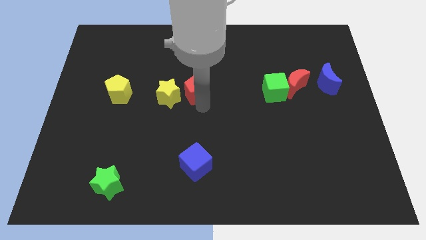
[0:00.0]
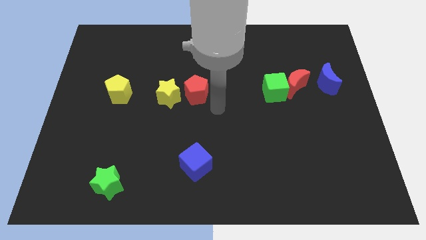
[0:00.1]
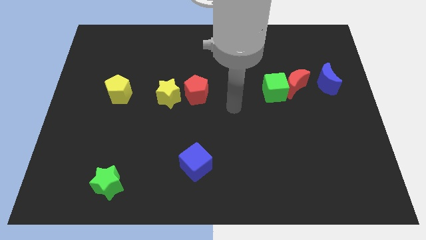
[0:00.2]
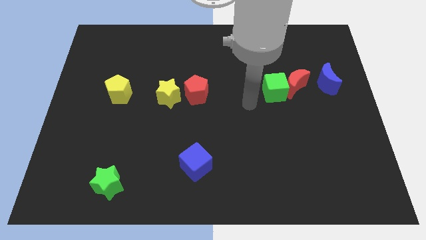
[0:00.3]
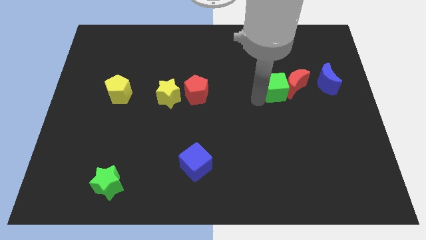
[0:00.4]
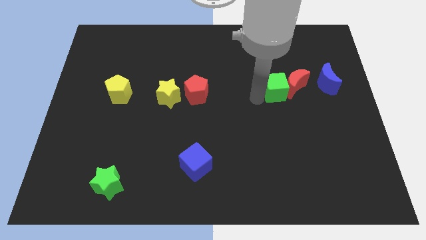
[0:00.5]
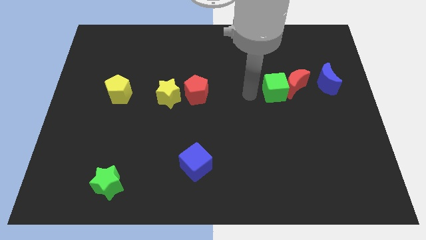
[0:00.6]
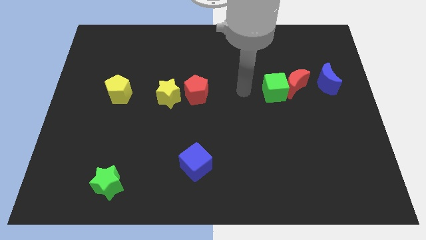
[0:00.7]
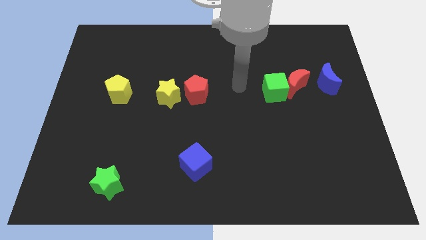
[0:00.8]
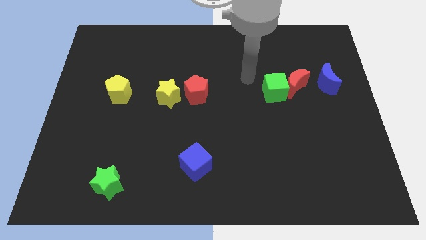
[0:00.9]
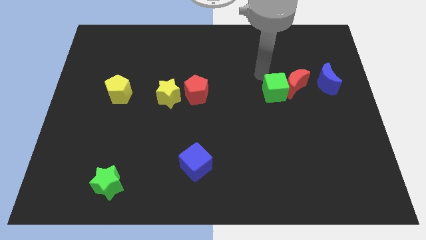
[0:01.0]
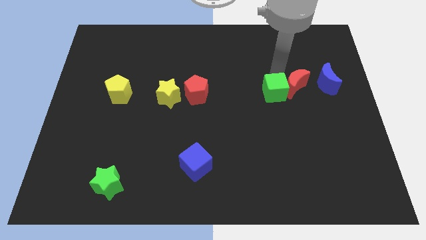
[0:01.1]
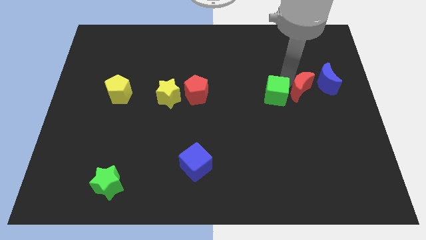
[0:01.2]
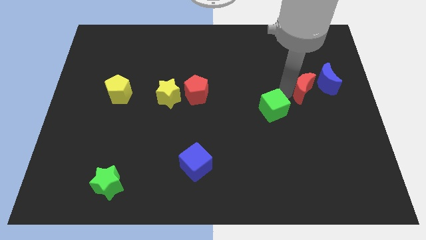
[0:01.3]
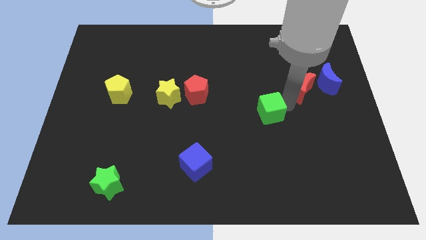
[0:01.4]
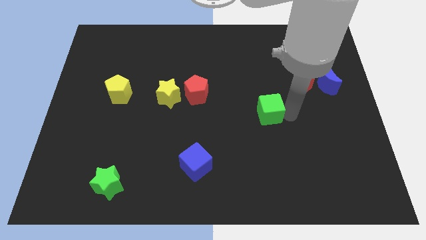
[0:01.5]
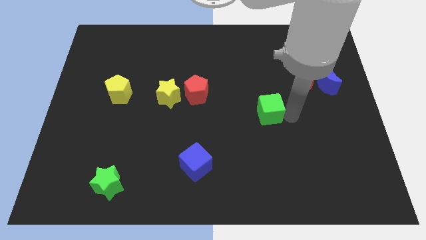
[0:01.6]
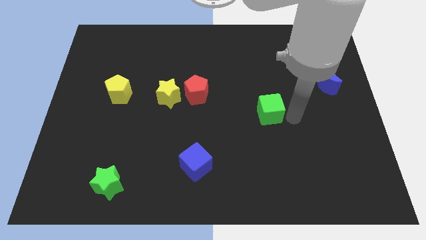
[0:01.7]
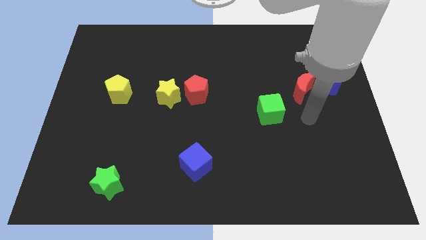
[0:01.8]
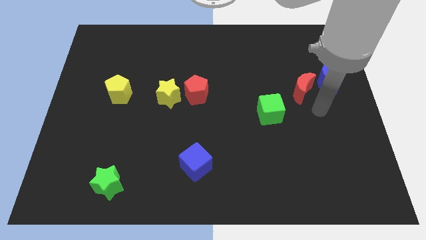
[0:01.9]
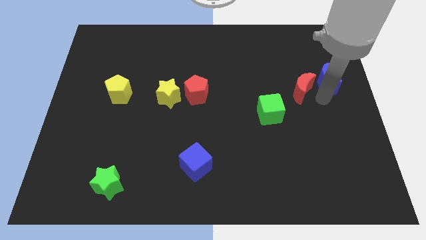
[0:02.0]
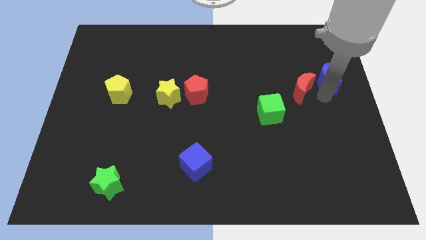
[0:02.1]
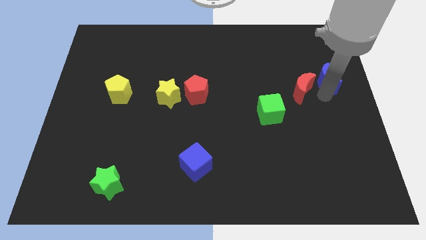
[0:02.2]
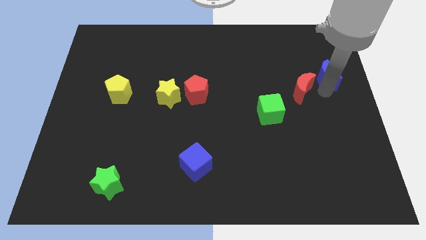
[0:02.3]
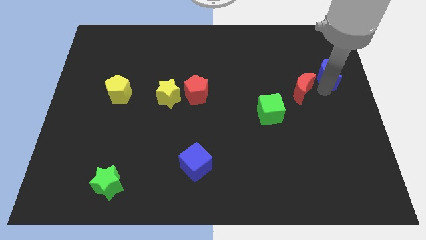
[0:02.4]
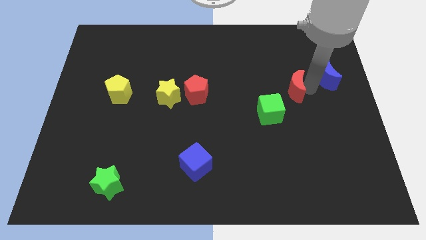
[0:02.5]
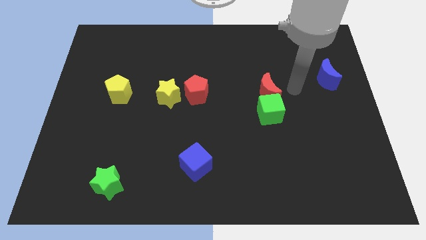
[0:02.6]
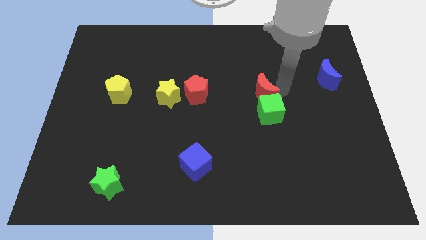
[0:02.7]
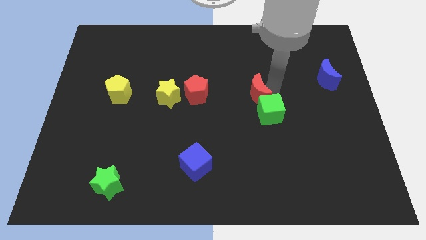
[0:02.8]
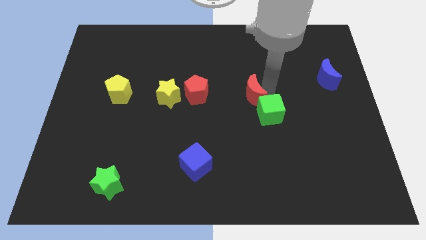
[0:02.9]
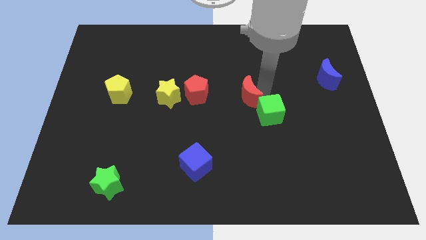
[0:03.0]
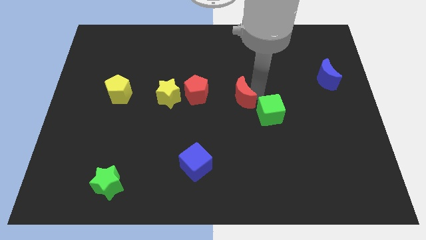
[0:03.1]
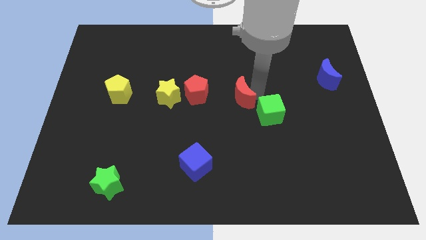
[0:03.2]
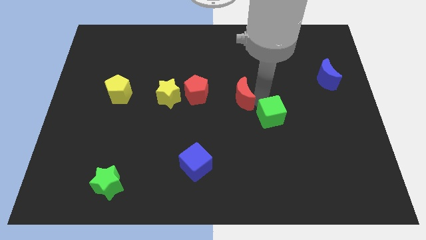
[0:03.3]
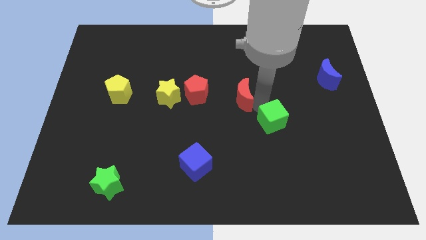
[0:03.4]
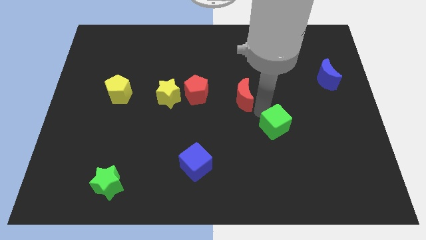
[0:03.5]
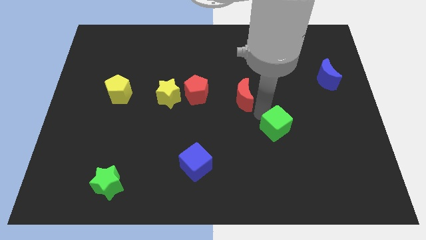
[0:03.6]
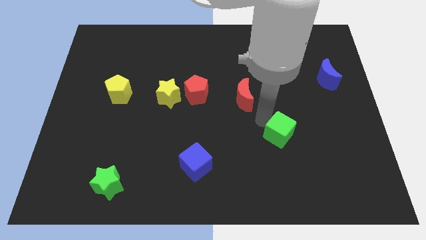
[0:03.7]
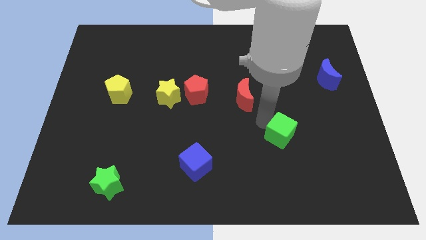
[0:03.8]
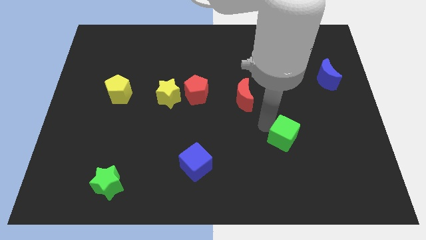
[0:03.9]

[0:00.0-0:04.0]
separate the green cube from the red moon

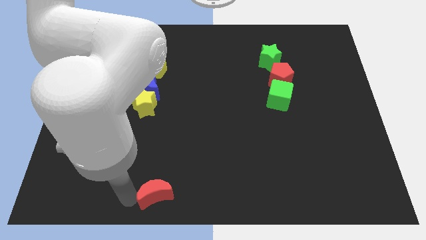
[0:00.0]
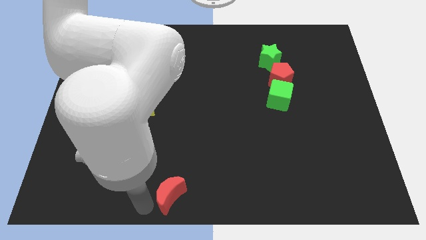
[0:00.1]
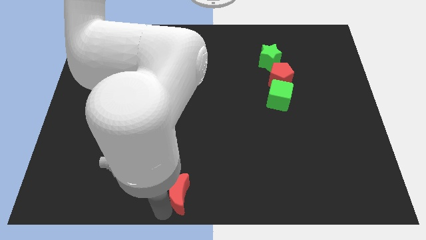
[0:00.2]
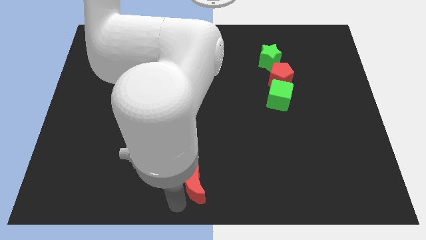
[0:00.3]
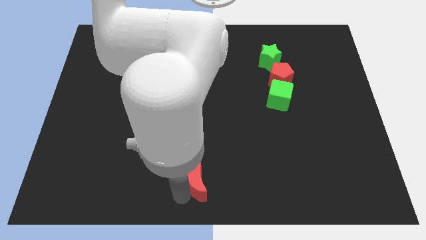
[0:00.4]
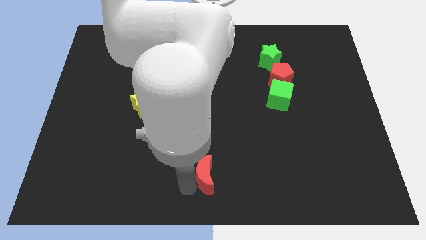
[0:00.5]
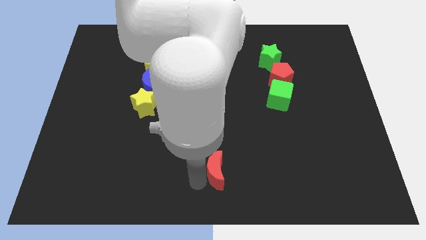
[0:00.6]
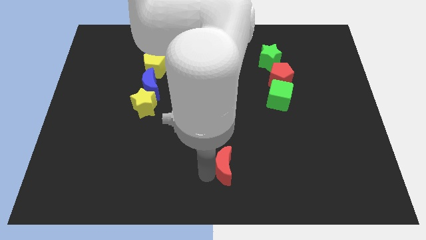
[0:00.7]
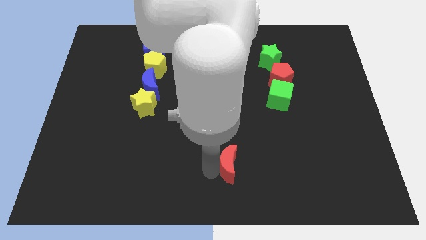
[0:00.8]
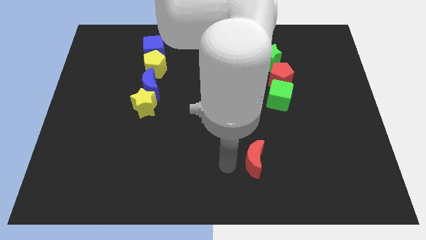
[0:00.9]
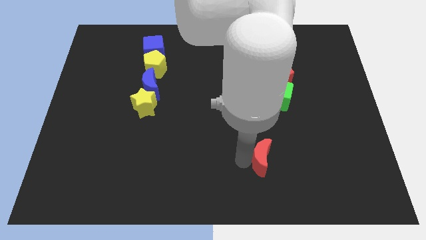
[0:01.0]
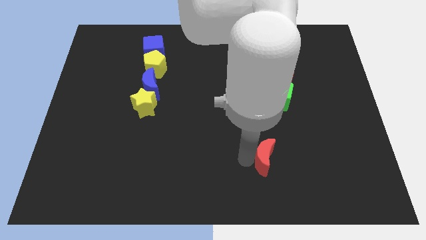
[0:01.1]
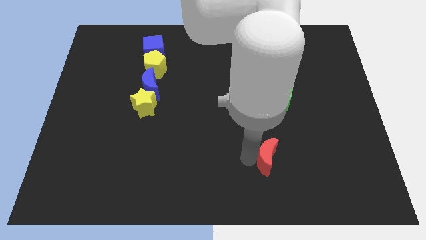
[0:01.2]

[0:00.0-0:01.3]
push the red crescent to the right side of the table

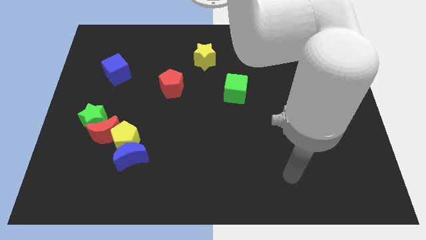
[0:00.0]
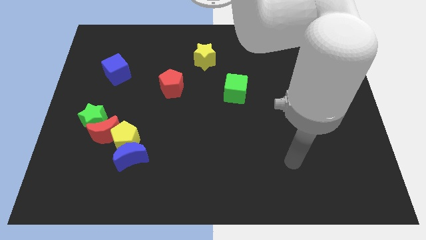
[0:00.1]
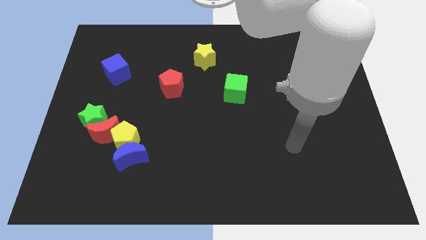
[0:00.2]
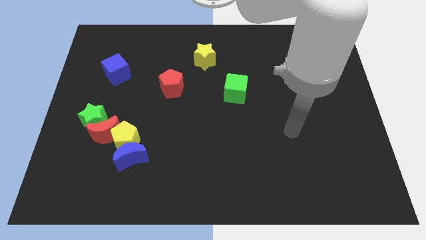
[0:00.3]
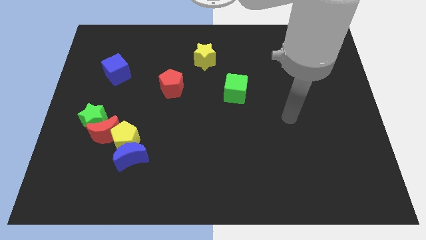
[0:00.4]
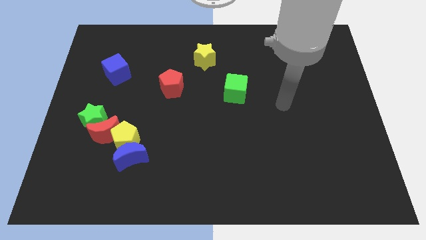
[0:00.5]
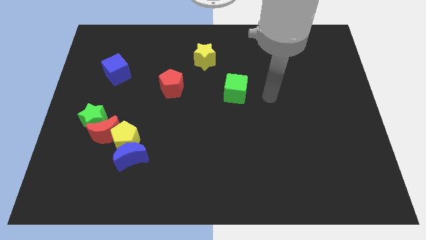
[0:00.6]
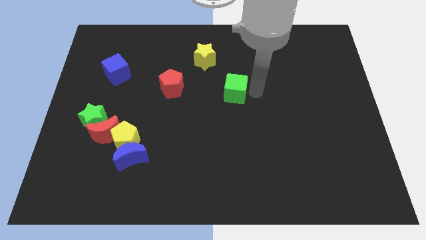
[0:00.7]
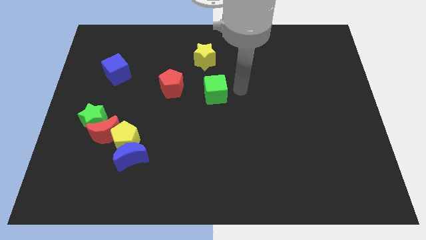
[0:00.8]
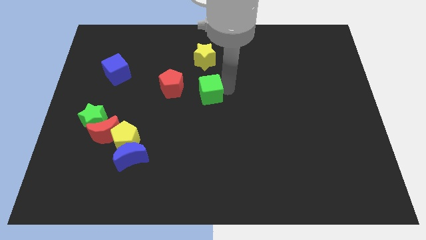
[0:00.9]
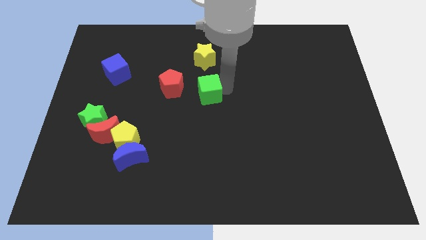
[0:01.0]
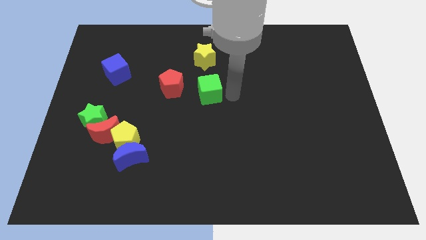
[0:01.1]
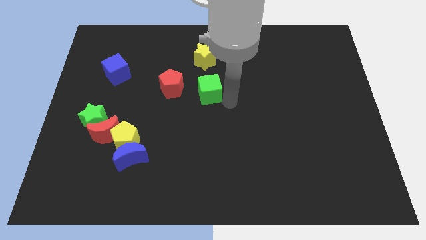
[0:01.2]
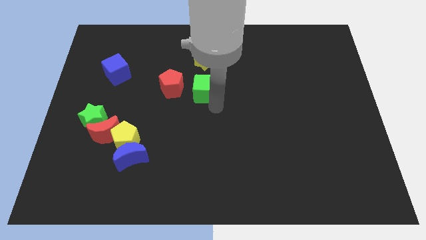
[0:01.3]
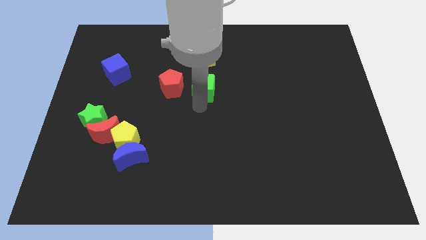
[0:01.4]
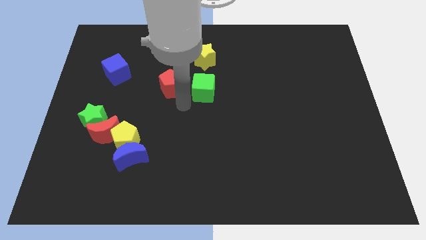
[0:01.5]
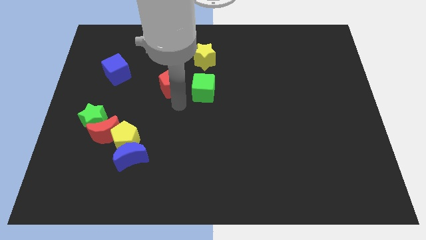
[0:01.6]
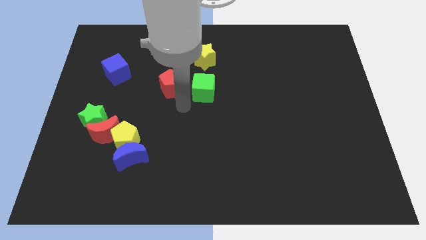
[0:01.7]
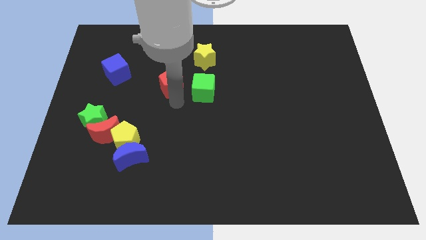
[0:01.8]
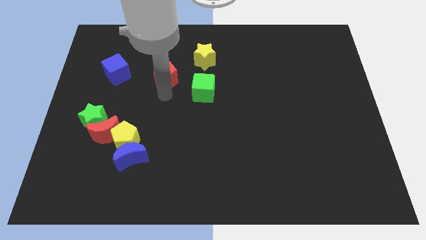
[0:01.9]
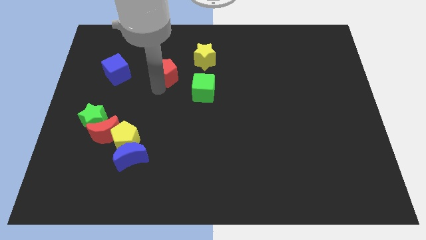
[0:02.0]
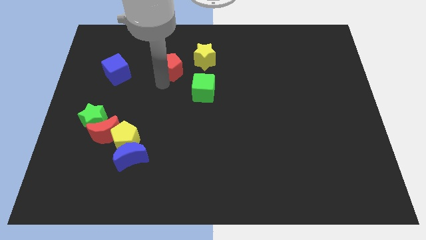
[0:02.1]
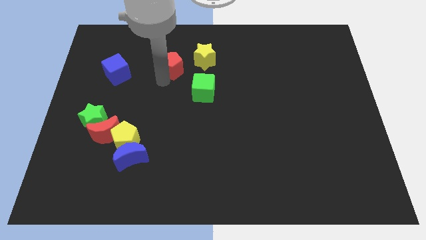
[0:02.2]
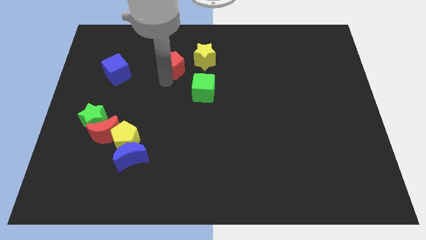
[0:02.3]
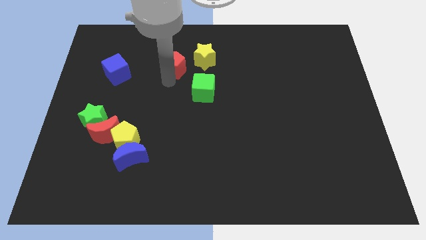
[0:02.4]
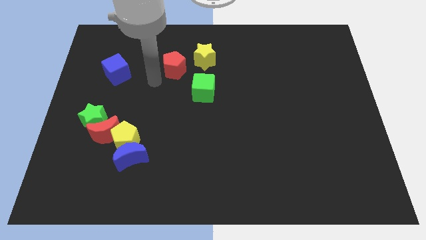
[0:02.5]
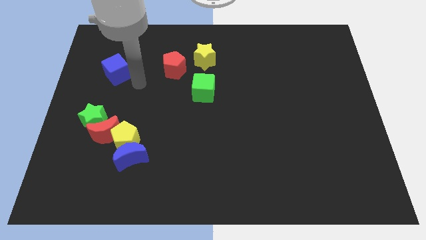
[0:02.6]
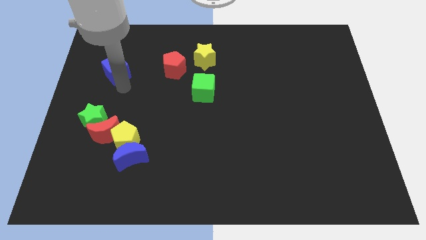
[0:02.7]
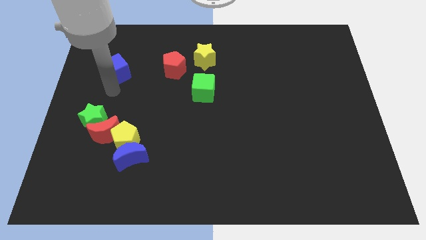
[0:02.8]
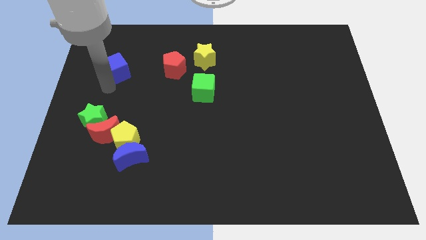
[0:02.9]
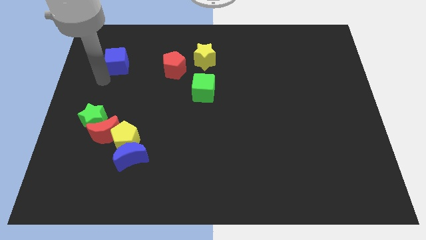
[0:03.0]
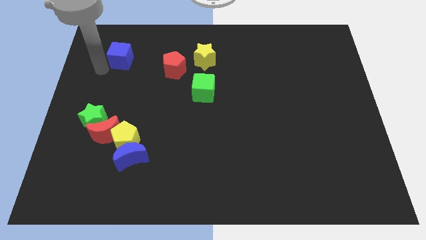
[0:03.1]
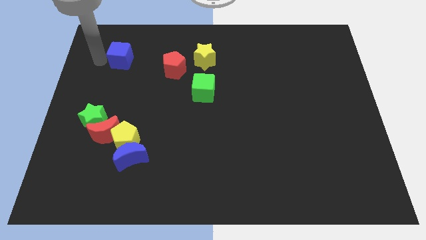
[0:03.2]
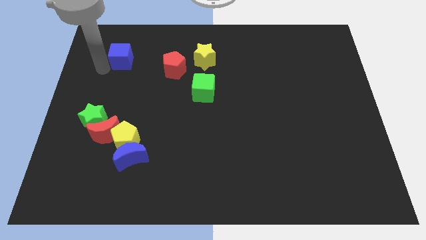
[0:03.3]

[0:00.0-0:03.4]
push slightly the green cube red pentagon and blue cube towards yellow star

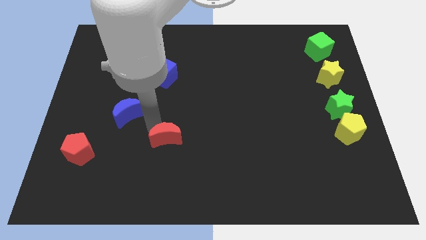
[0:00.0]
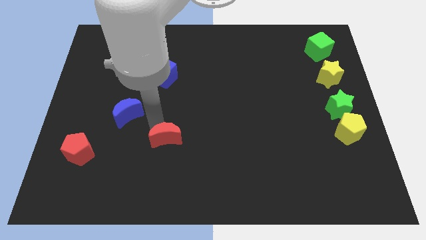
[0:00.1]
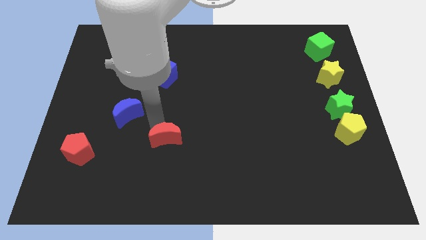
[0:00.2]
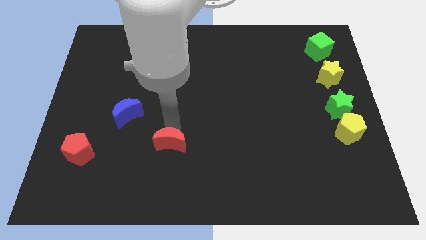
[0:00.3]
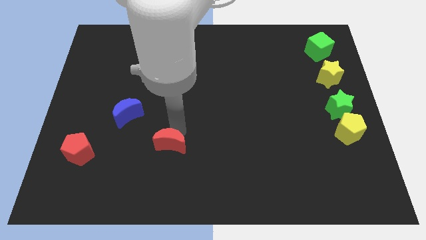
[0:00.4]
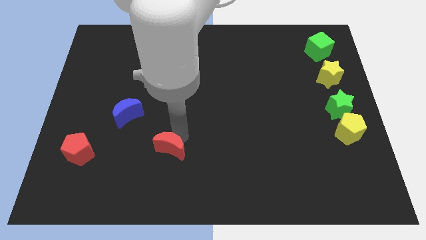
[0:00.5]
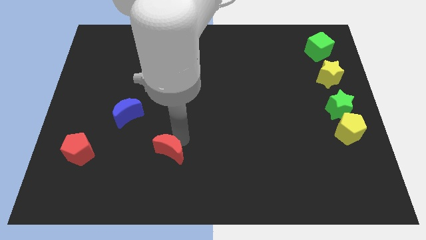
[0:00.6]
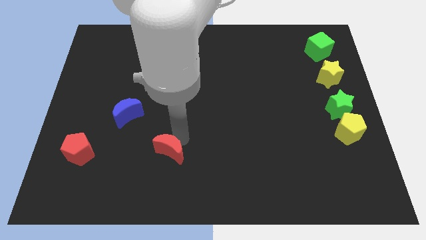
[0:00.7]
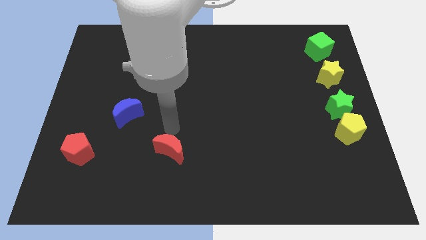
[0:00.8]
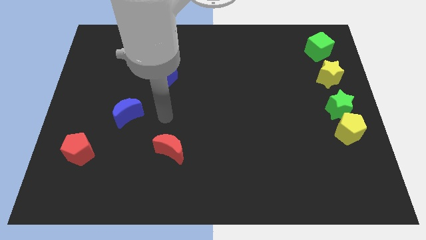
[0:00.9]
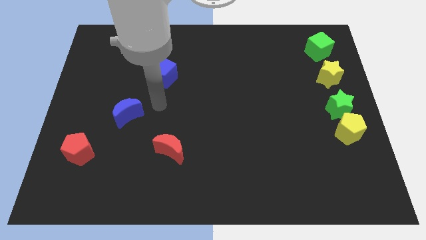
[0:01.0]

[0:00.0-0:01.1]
move the red crescent to the bottom of the board
